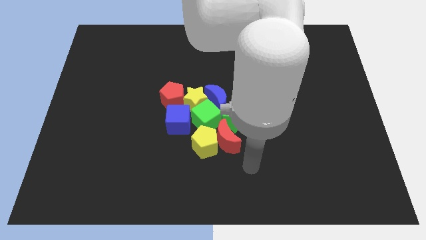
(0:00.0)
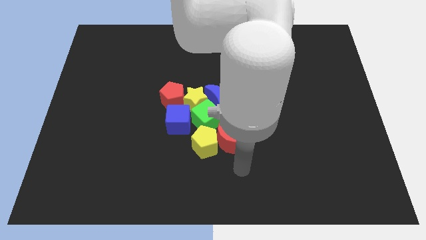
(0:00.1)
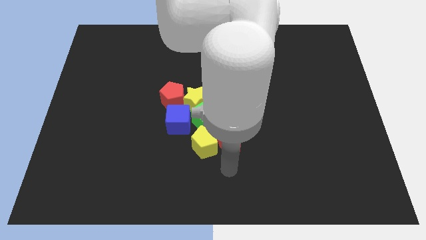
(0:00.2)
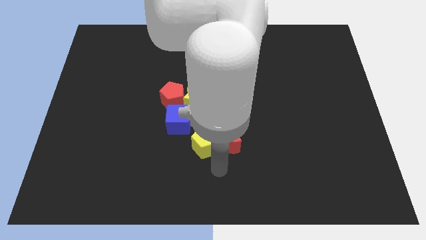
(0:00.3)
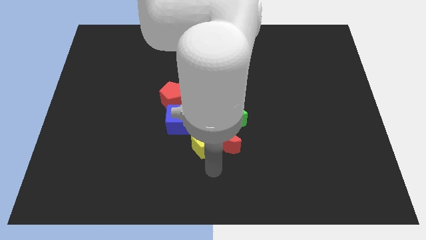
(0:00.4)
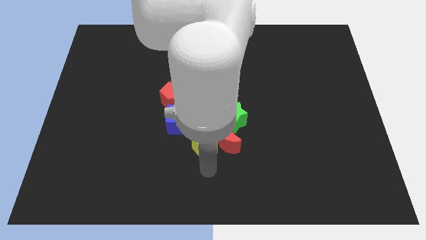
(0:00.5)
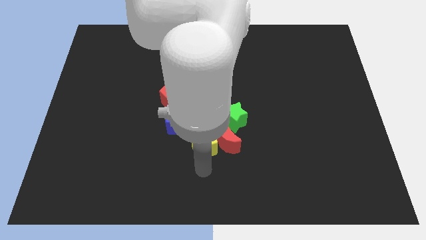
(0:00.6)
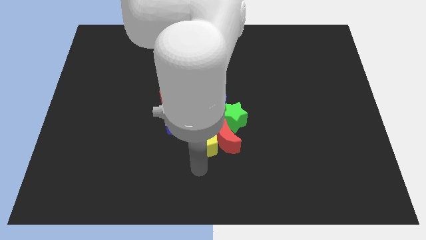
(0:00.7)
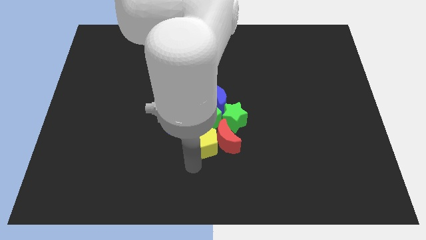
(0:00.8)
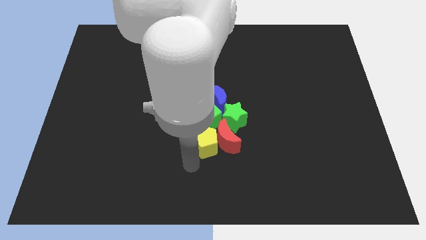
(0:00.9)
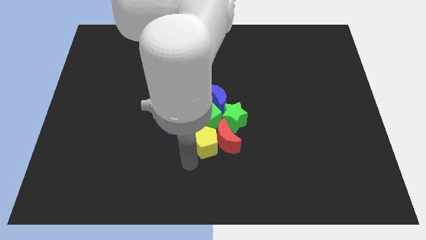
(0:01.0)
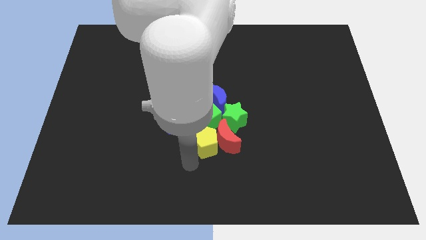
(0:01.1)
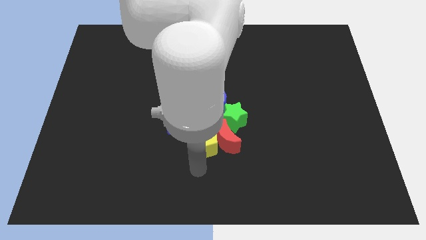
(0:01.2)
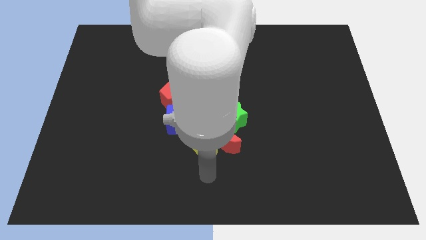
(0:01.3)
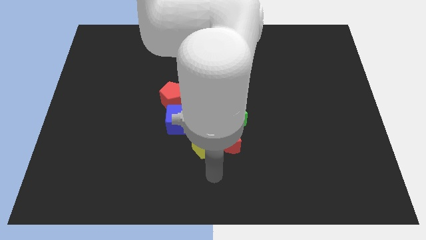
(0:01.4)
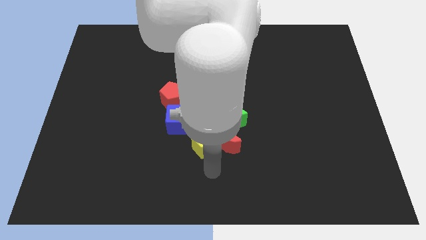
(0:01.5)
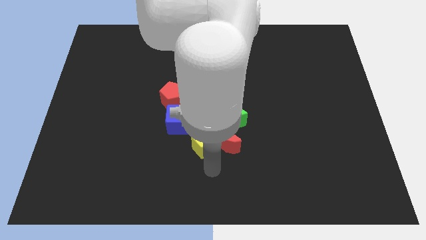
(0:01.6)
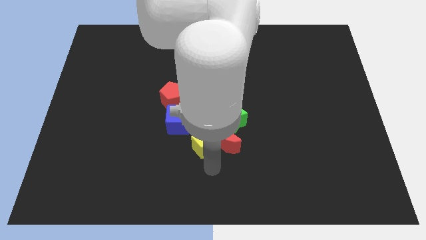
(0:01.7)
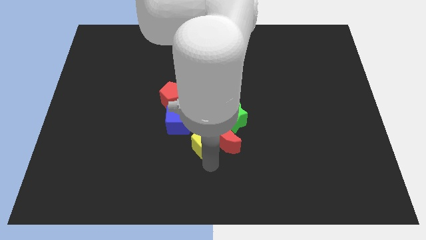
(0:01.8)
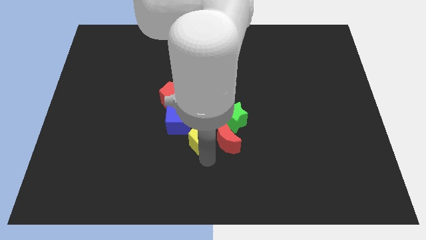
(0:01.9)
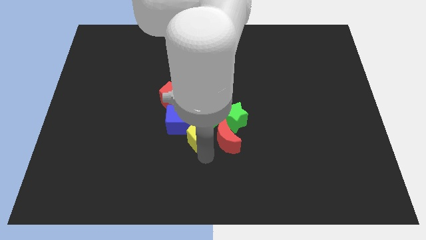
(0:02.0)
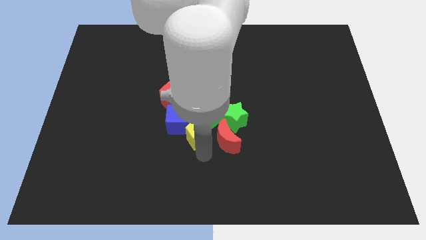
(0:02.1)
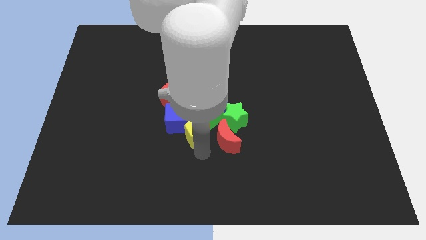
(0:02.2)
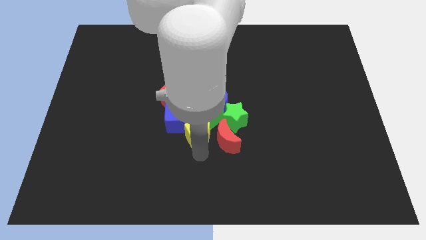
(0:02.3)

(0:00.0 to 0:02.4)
push the yellow pentagon into the group of blocks

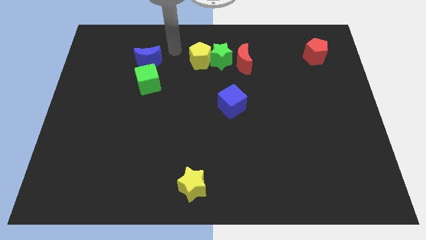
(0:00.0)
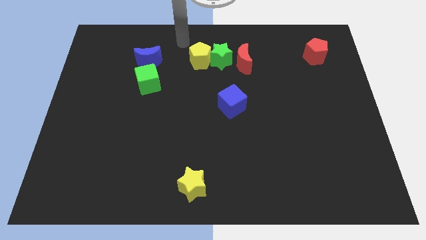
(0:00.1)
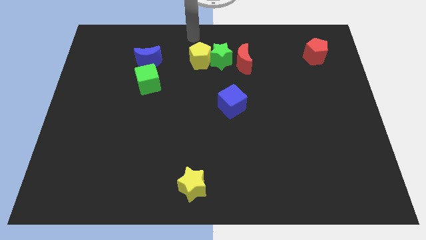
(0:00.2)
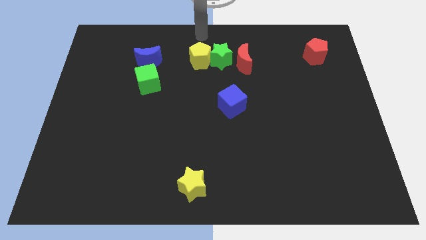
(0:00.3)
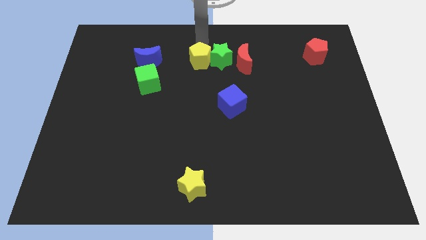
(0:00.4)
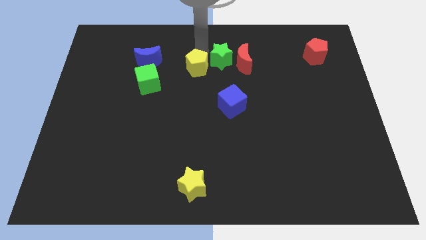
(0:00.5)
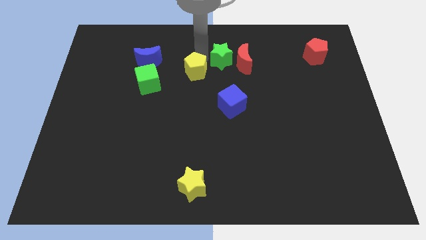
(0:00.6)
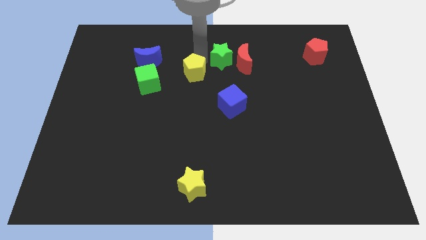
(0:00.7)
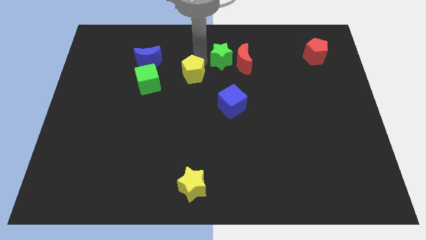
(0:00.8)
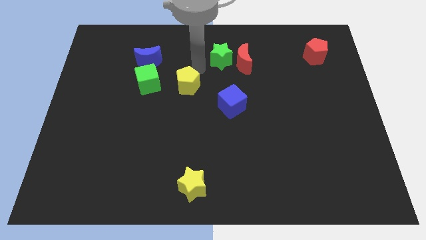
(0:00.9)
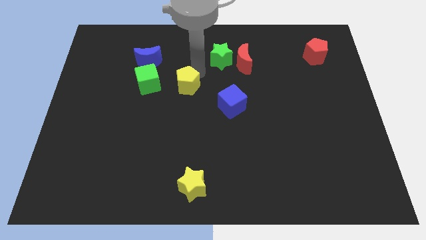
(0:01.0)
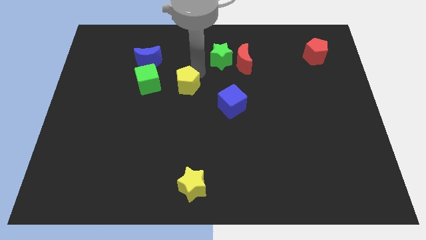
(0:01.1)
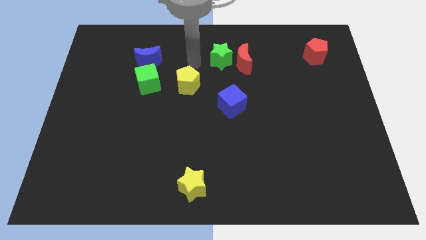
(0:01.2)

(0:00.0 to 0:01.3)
move the yellow pentagon to the right of the green cube

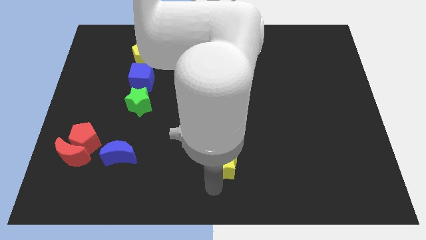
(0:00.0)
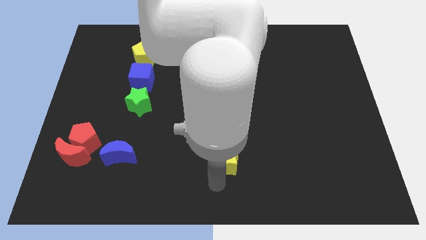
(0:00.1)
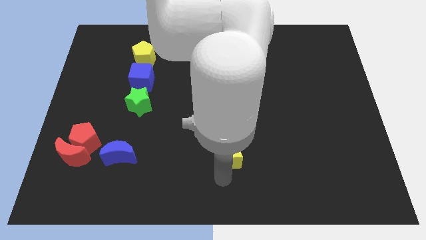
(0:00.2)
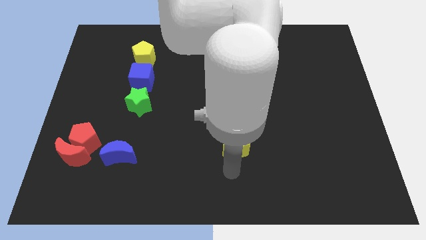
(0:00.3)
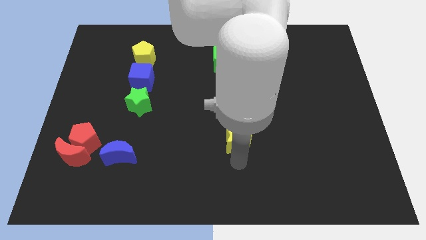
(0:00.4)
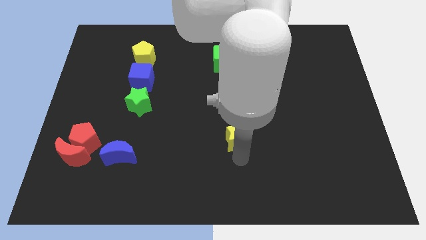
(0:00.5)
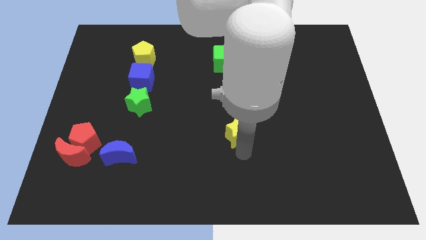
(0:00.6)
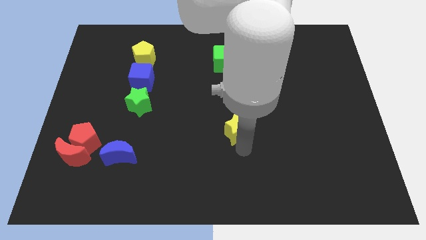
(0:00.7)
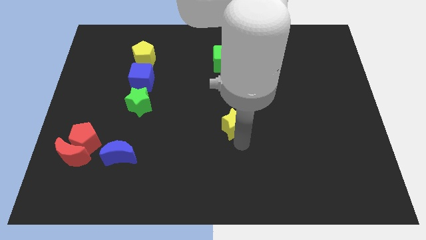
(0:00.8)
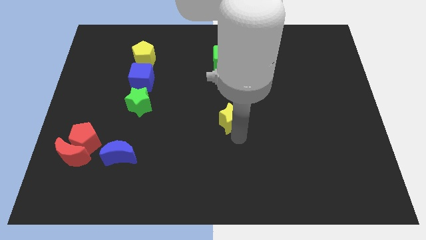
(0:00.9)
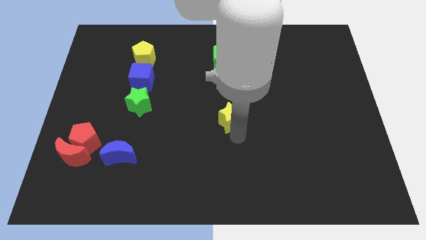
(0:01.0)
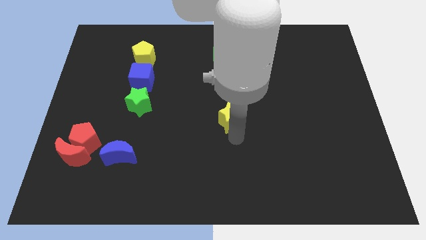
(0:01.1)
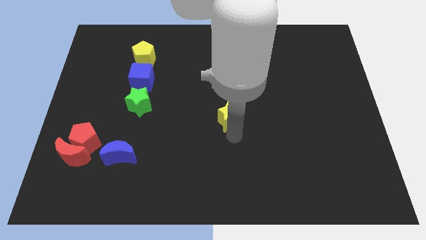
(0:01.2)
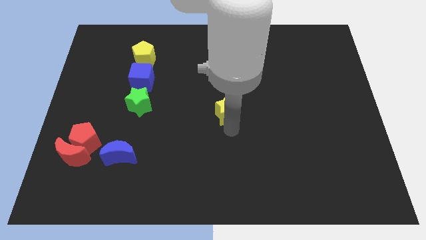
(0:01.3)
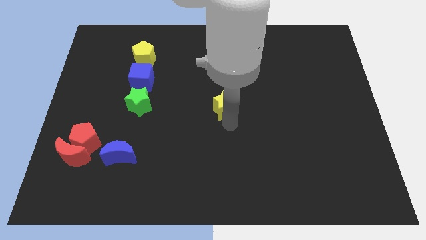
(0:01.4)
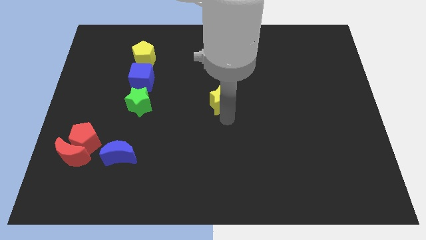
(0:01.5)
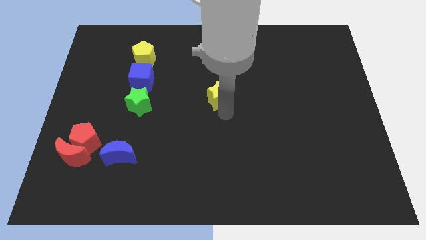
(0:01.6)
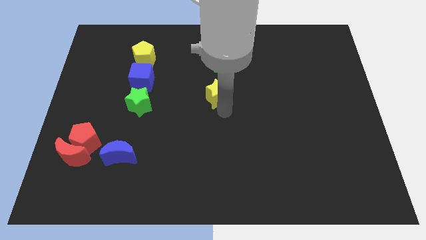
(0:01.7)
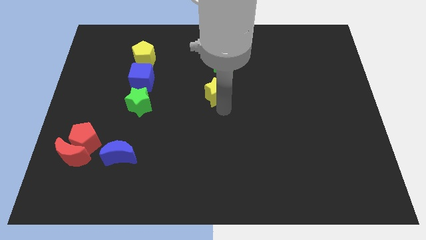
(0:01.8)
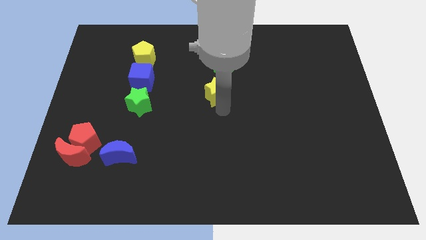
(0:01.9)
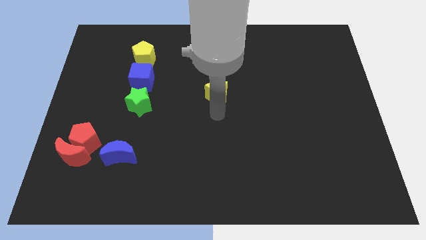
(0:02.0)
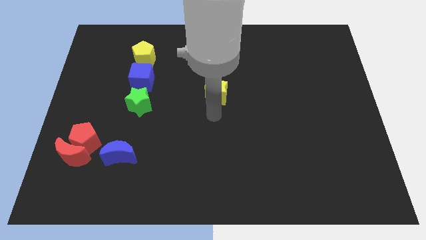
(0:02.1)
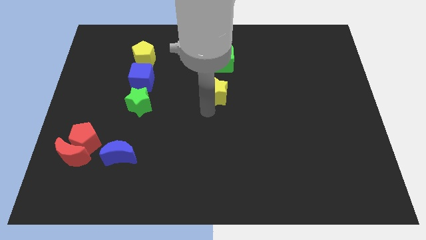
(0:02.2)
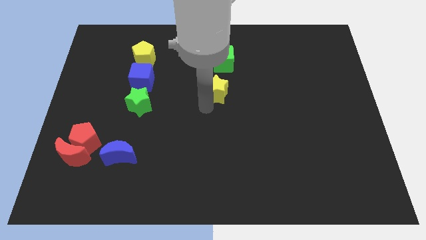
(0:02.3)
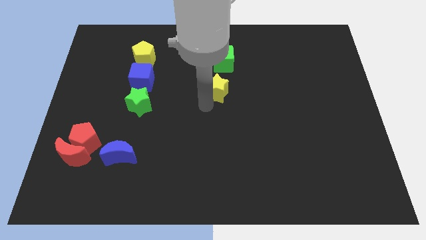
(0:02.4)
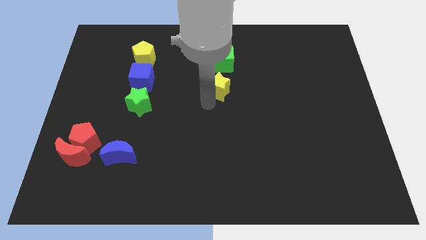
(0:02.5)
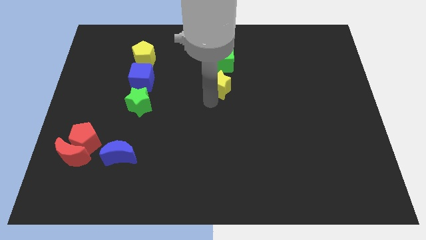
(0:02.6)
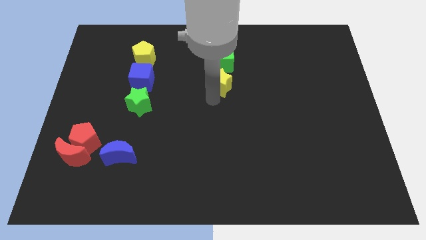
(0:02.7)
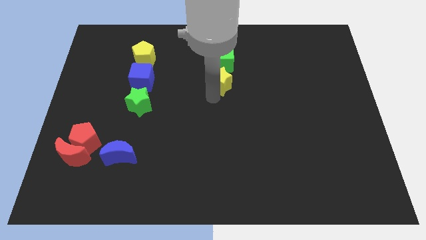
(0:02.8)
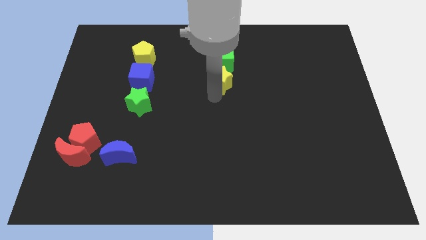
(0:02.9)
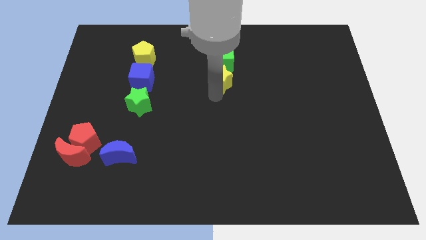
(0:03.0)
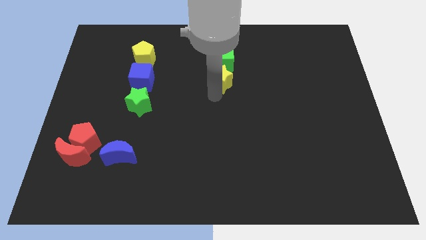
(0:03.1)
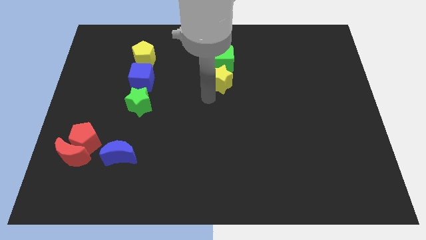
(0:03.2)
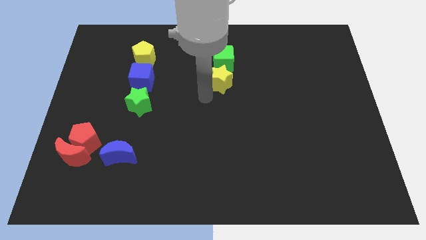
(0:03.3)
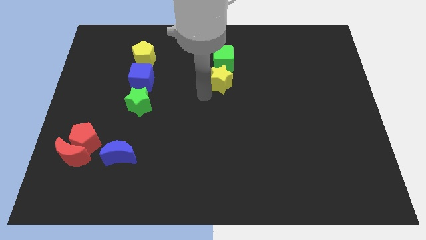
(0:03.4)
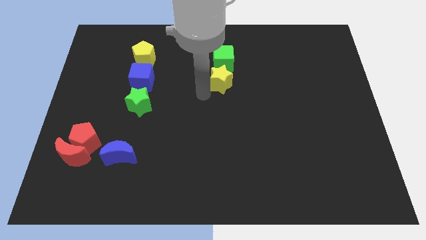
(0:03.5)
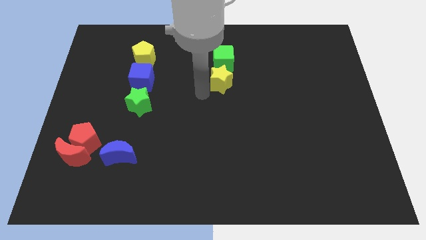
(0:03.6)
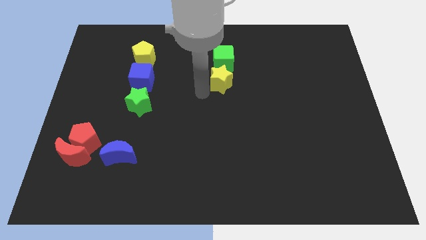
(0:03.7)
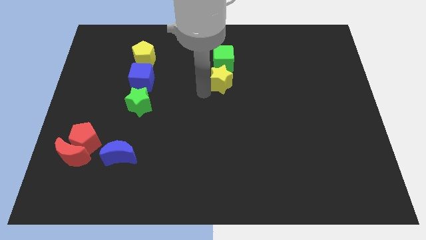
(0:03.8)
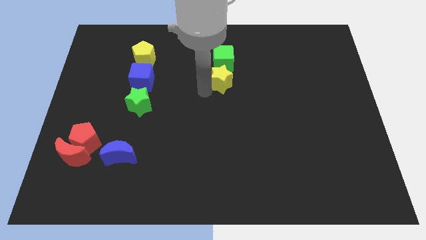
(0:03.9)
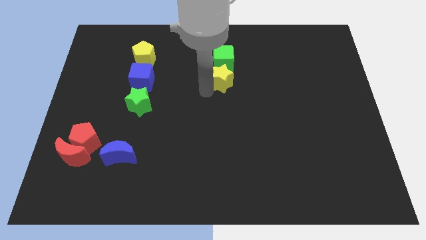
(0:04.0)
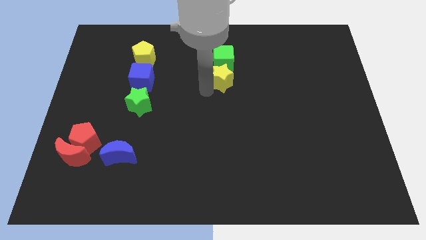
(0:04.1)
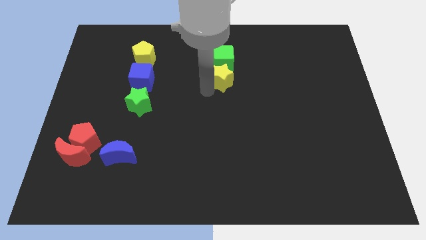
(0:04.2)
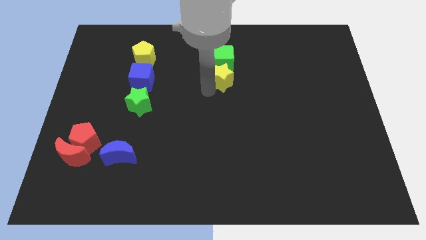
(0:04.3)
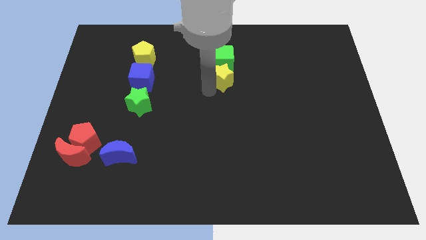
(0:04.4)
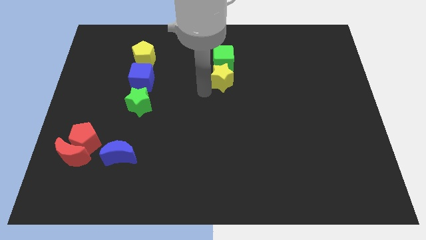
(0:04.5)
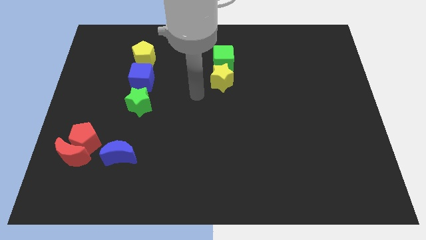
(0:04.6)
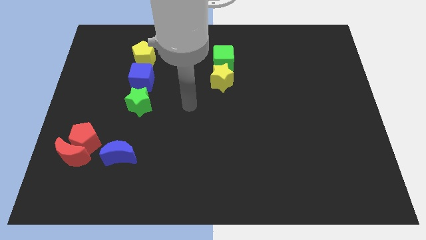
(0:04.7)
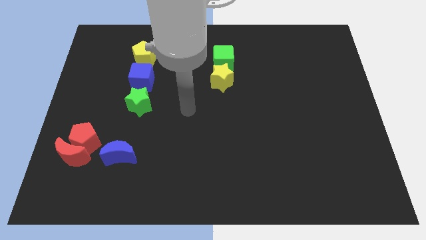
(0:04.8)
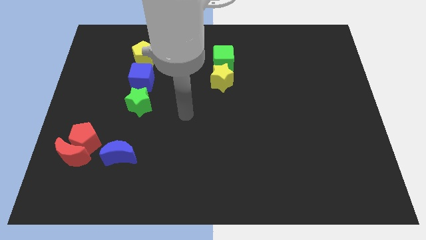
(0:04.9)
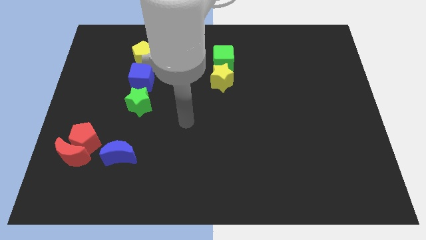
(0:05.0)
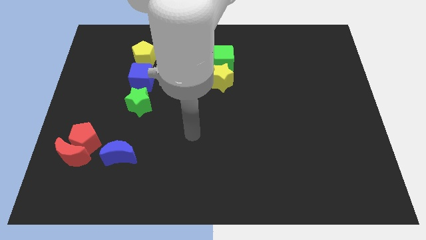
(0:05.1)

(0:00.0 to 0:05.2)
move yellow star into green cube

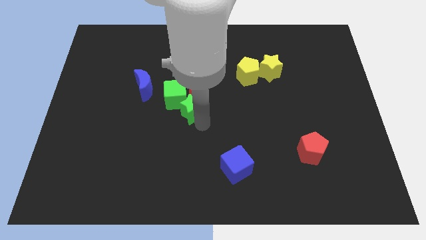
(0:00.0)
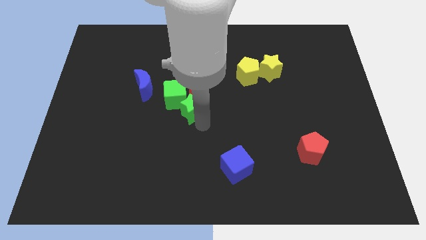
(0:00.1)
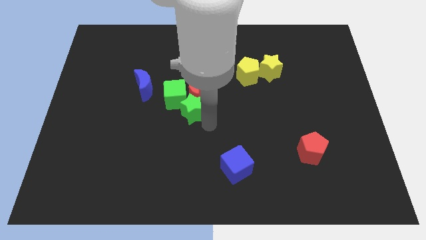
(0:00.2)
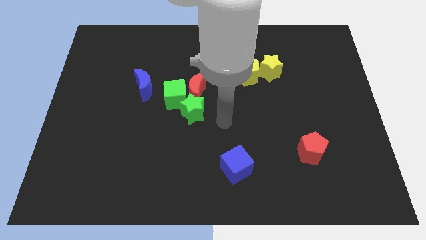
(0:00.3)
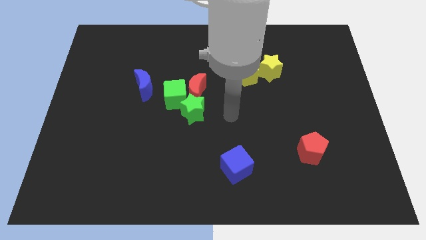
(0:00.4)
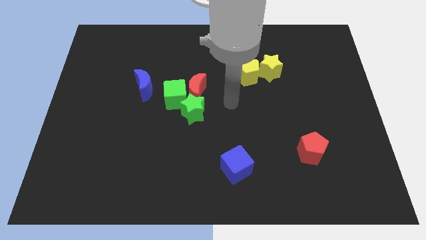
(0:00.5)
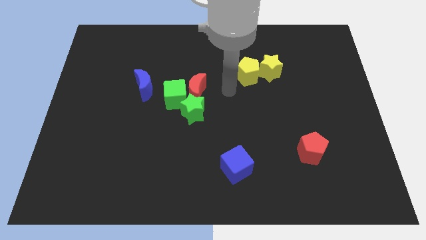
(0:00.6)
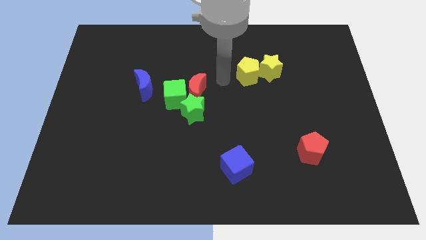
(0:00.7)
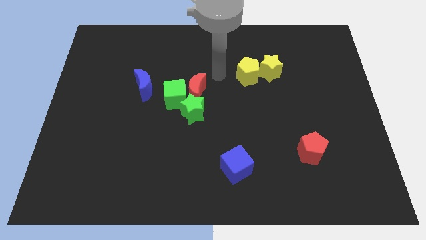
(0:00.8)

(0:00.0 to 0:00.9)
place your arm in between the yellow pentagon and red moon
